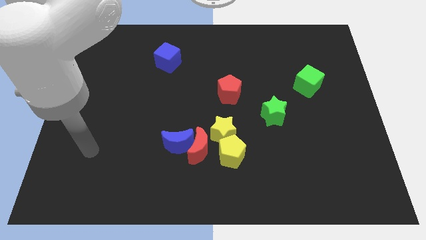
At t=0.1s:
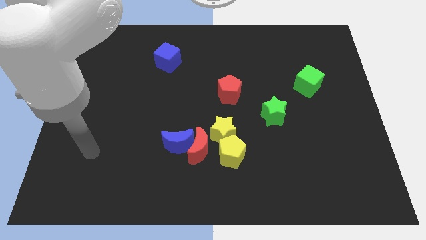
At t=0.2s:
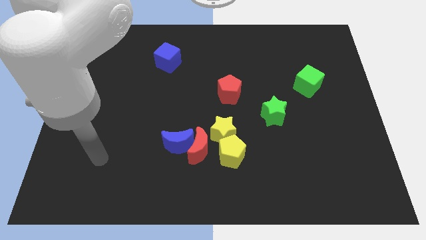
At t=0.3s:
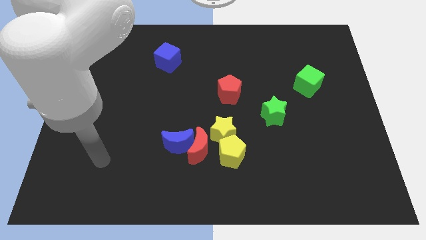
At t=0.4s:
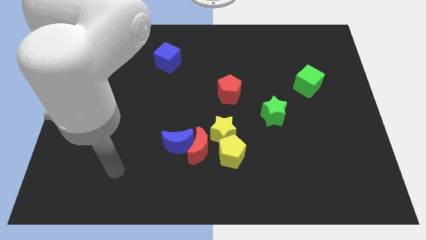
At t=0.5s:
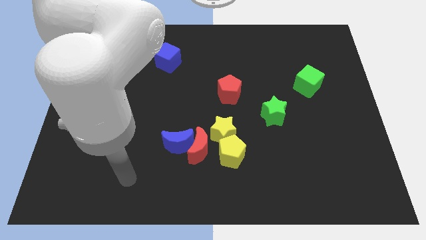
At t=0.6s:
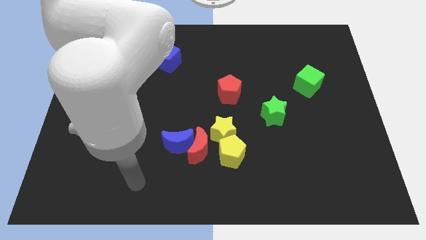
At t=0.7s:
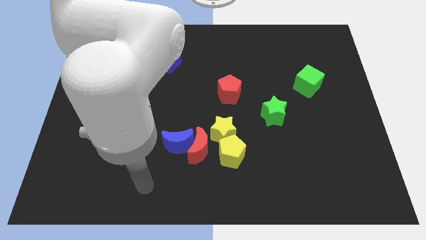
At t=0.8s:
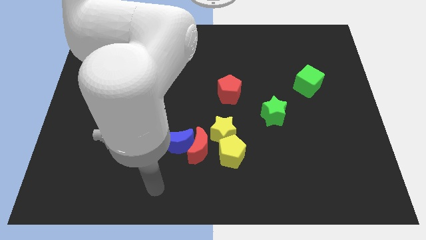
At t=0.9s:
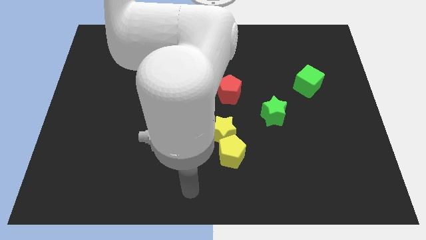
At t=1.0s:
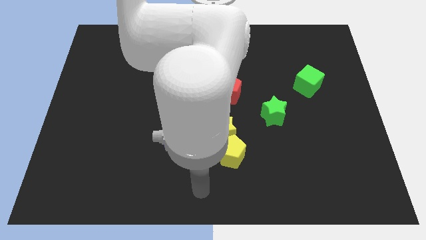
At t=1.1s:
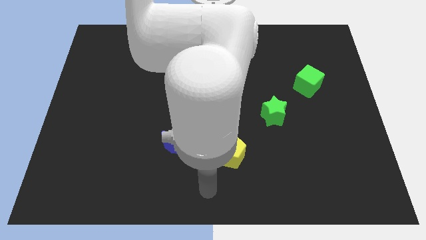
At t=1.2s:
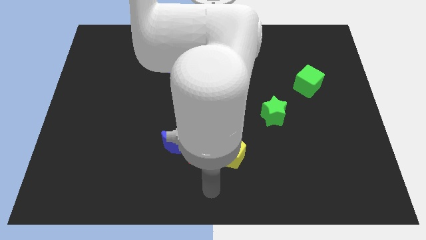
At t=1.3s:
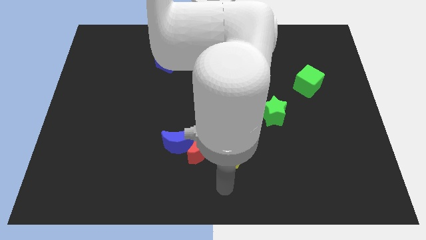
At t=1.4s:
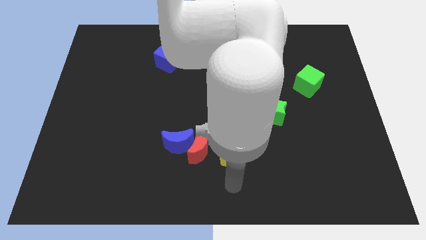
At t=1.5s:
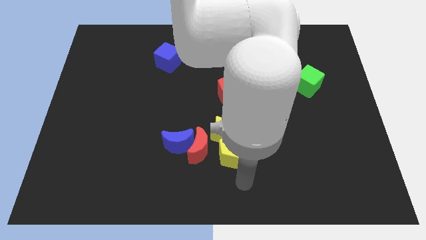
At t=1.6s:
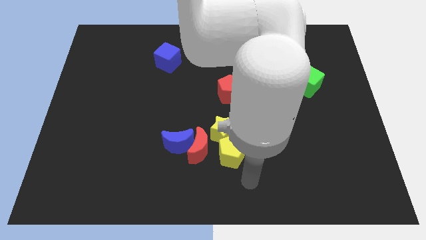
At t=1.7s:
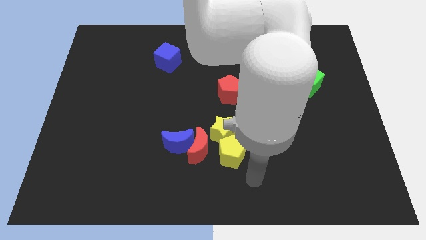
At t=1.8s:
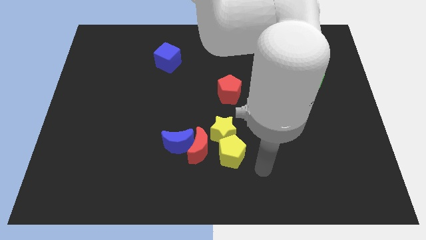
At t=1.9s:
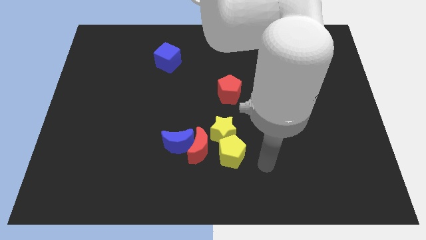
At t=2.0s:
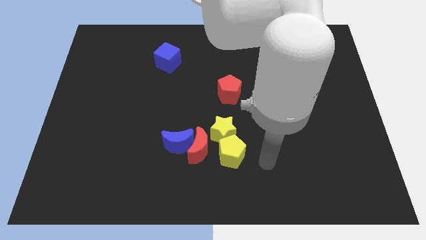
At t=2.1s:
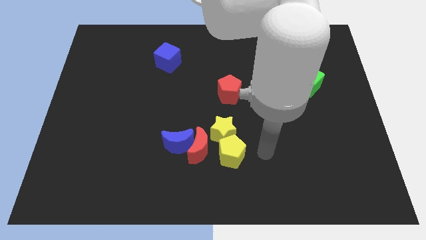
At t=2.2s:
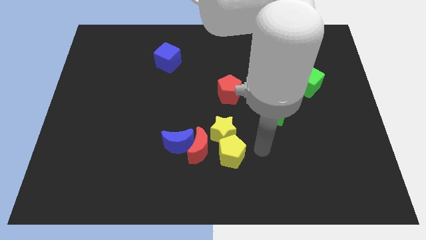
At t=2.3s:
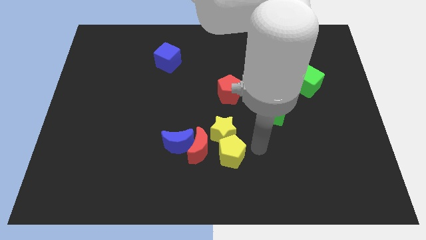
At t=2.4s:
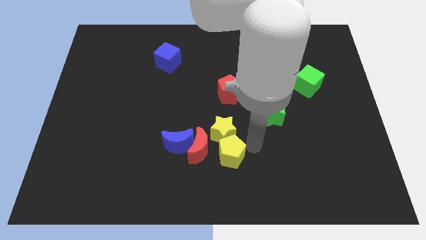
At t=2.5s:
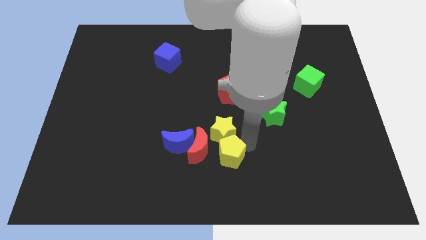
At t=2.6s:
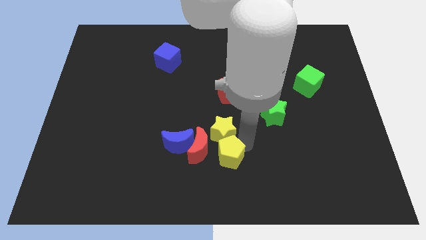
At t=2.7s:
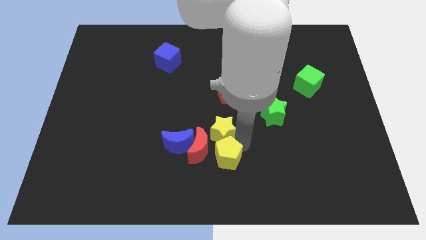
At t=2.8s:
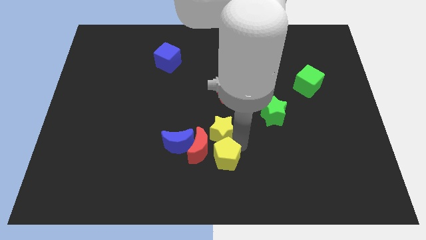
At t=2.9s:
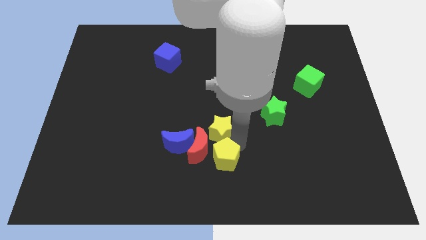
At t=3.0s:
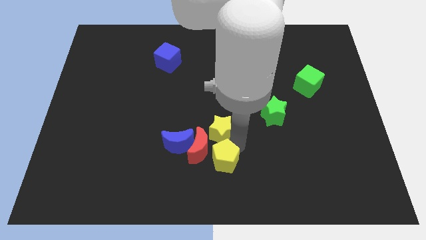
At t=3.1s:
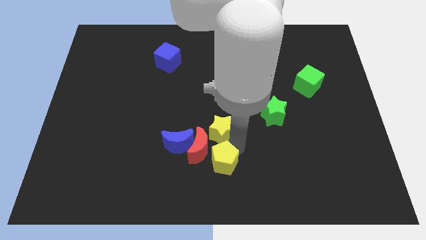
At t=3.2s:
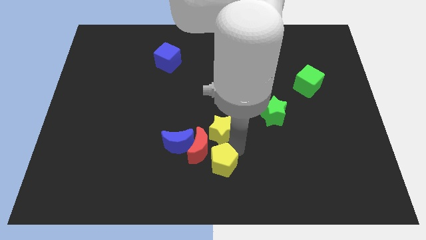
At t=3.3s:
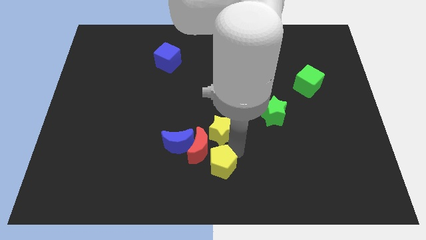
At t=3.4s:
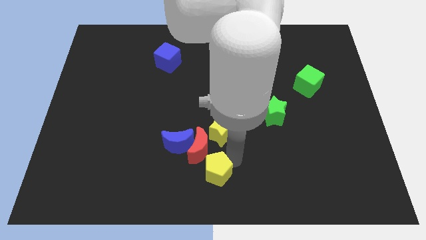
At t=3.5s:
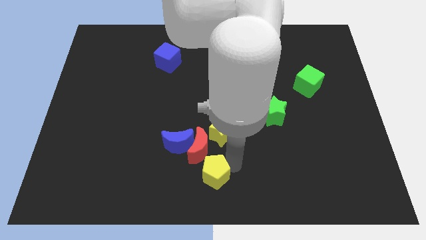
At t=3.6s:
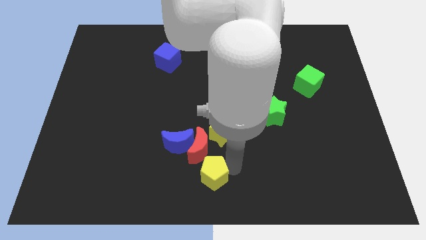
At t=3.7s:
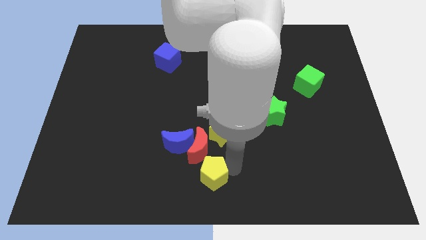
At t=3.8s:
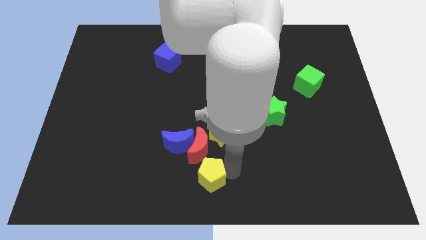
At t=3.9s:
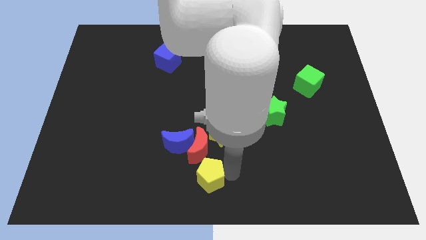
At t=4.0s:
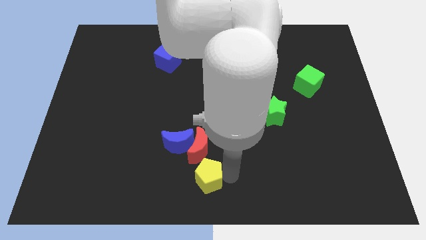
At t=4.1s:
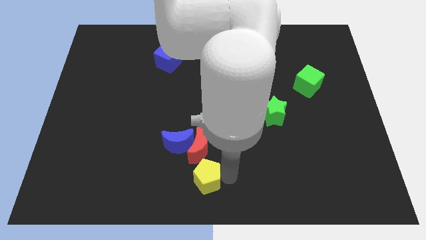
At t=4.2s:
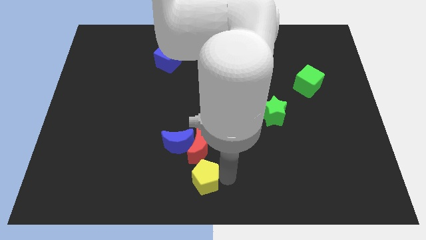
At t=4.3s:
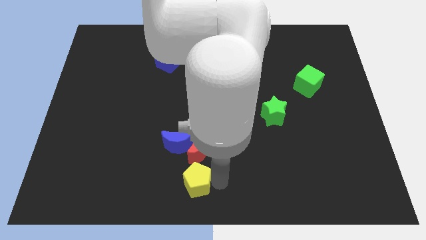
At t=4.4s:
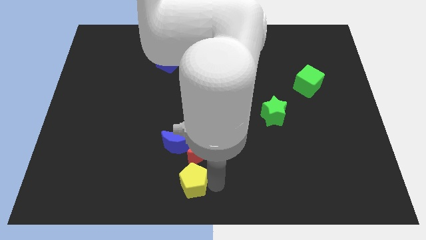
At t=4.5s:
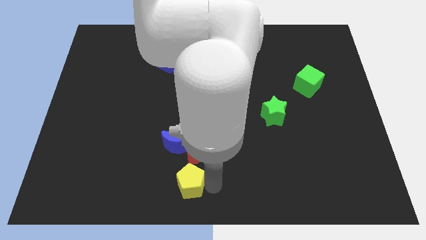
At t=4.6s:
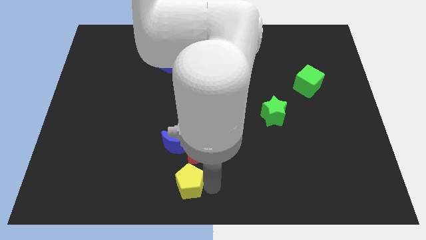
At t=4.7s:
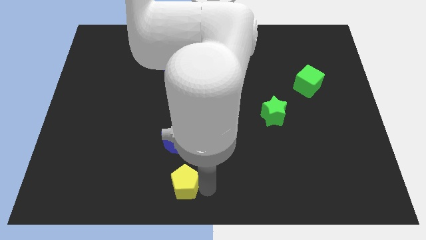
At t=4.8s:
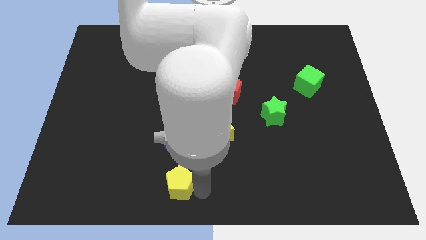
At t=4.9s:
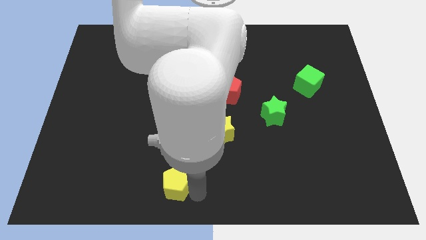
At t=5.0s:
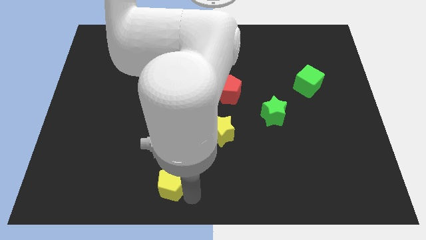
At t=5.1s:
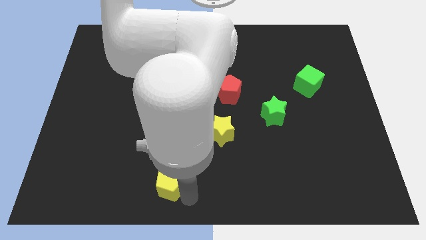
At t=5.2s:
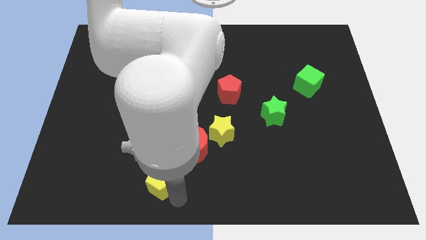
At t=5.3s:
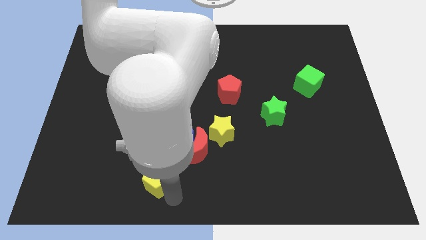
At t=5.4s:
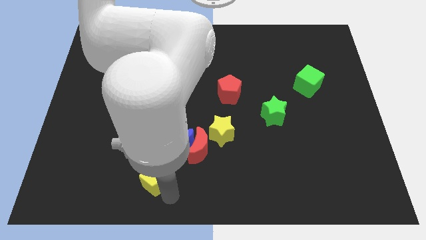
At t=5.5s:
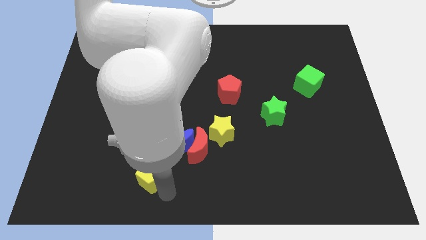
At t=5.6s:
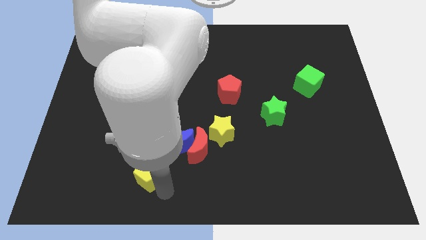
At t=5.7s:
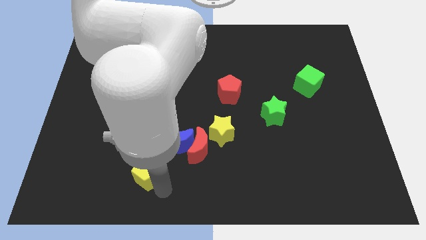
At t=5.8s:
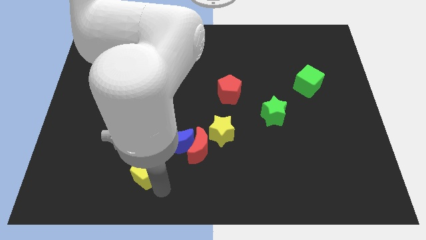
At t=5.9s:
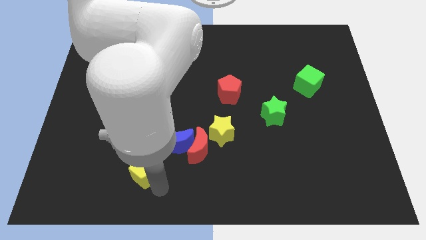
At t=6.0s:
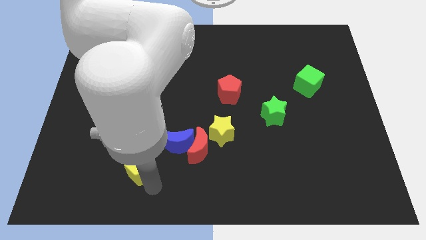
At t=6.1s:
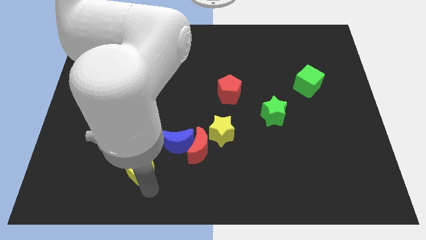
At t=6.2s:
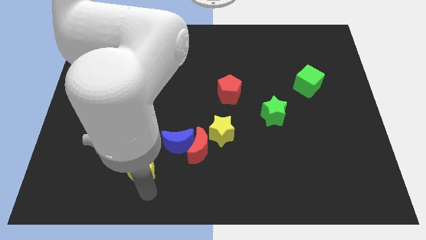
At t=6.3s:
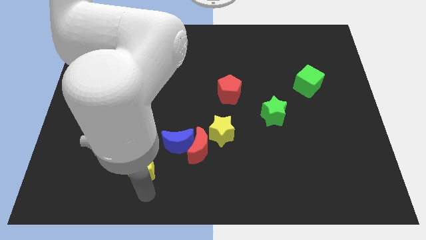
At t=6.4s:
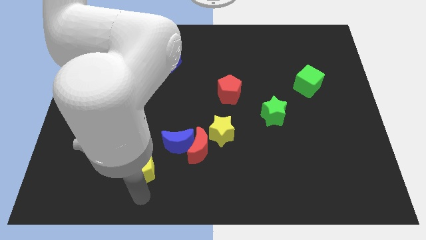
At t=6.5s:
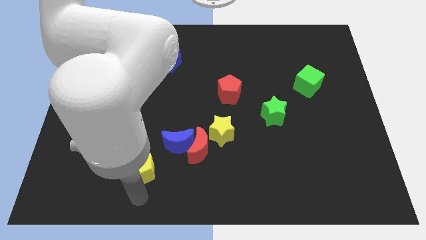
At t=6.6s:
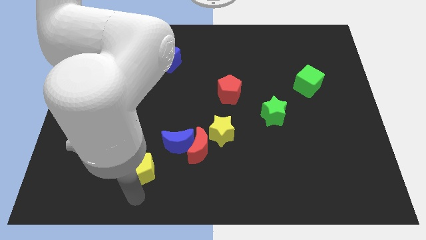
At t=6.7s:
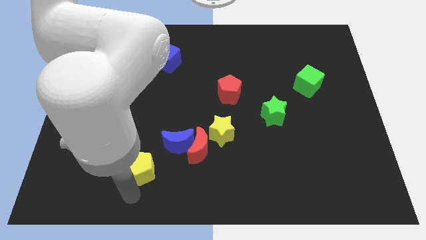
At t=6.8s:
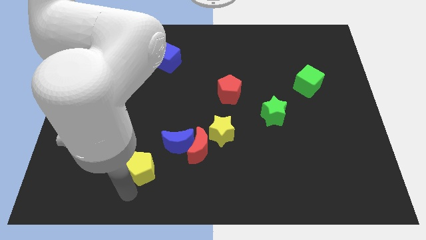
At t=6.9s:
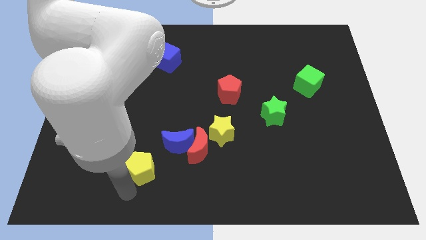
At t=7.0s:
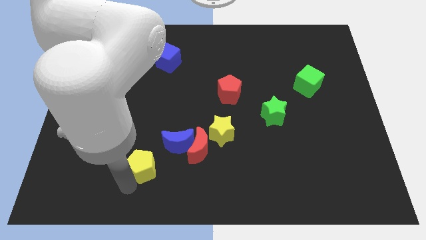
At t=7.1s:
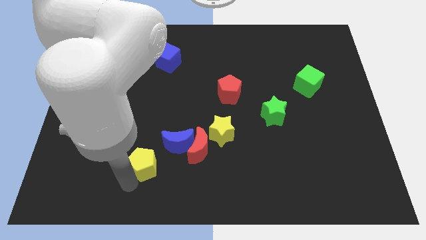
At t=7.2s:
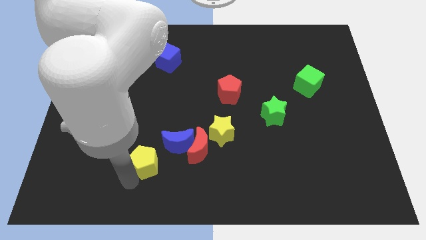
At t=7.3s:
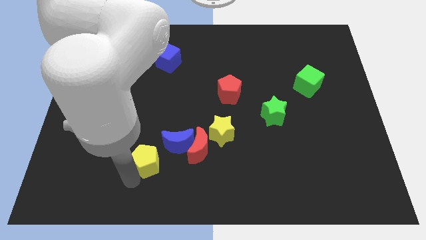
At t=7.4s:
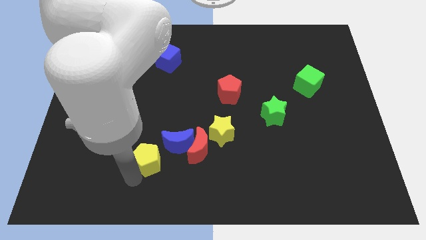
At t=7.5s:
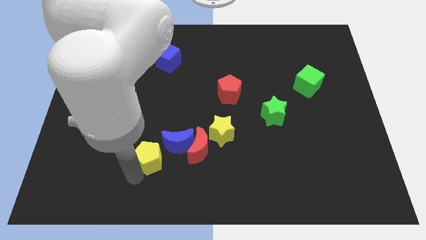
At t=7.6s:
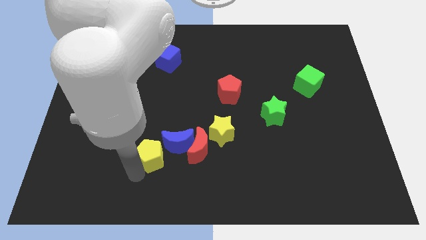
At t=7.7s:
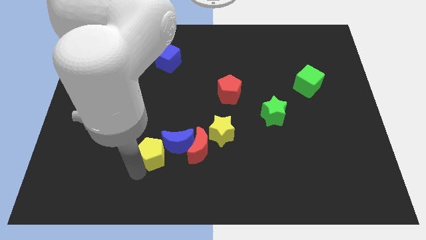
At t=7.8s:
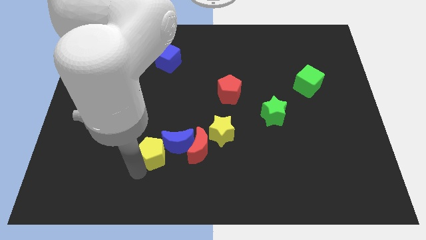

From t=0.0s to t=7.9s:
move the yellow pentagon to the blue moon
